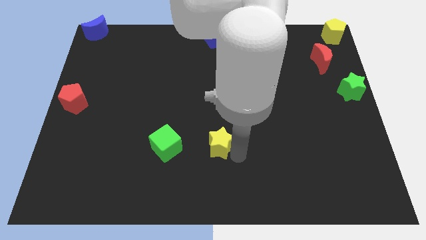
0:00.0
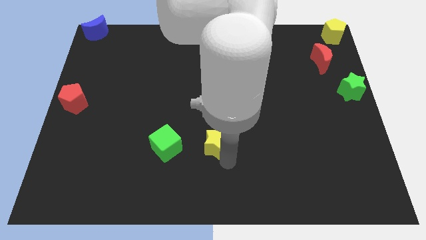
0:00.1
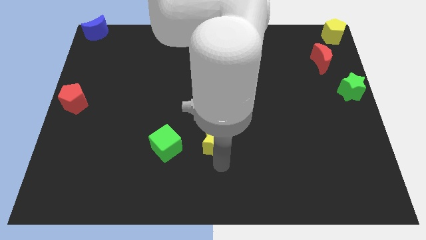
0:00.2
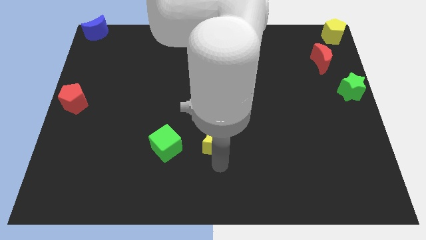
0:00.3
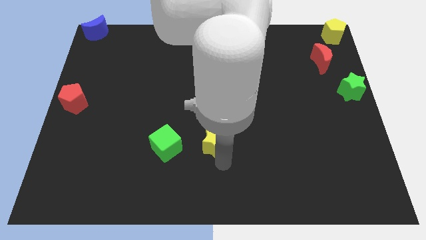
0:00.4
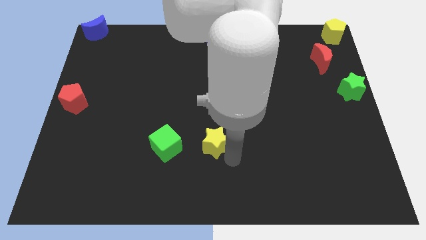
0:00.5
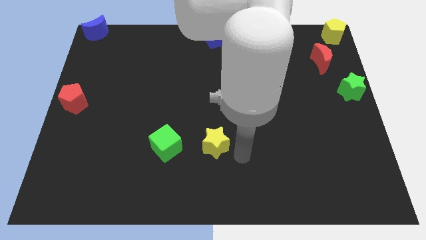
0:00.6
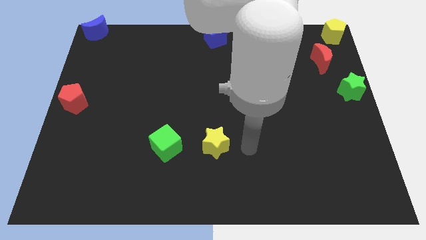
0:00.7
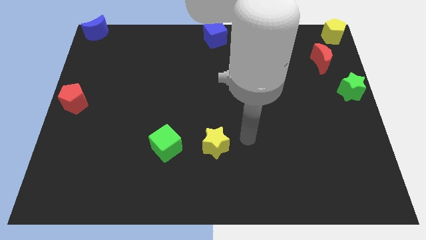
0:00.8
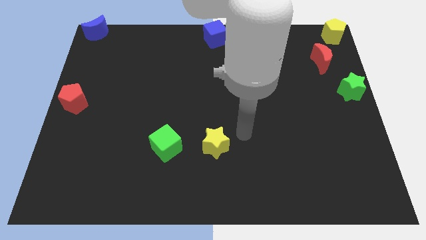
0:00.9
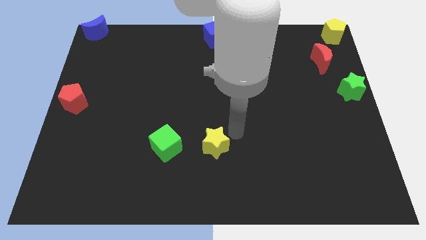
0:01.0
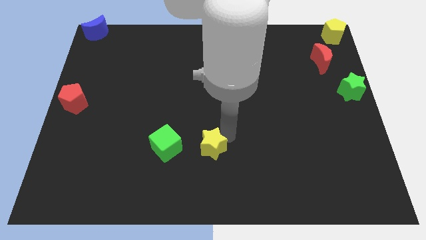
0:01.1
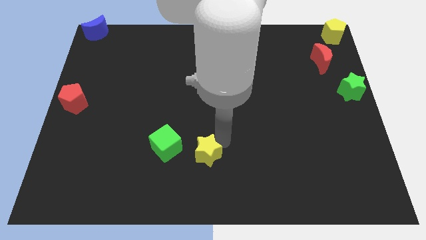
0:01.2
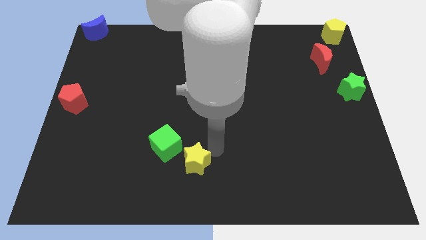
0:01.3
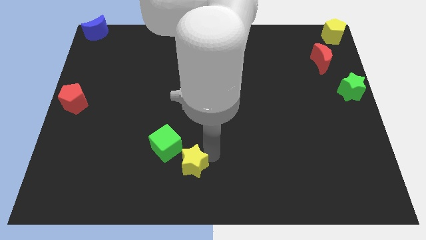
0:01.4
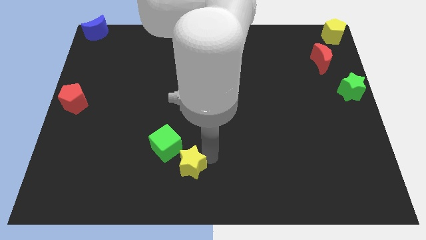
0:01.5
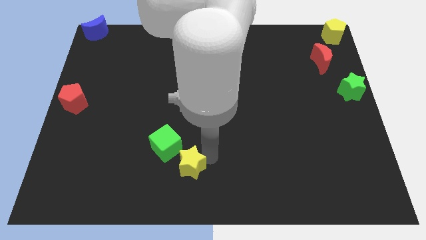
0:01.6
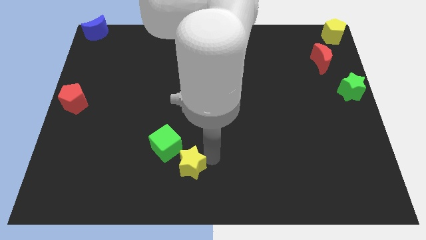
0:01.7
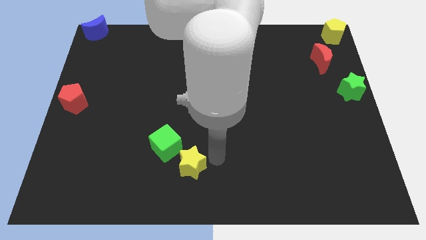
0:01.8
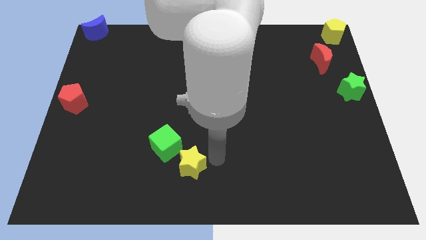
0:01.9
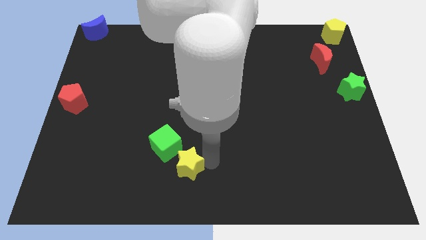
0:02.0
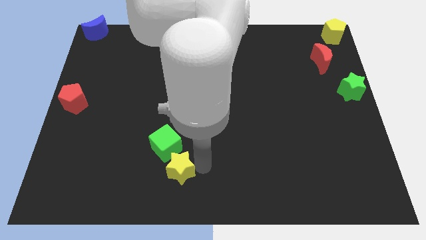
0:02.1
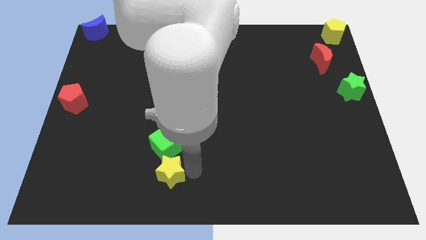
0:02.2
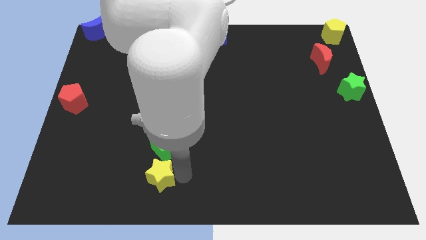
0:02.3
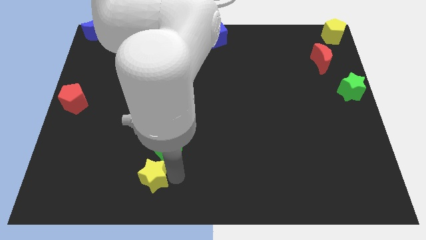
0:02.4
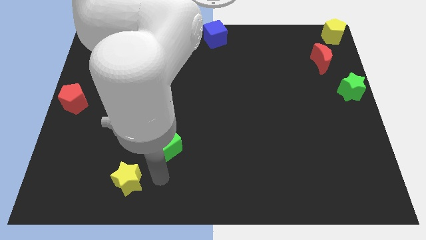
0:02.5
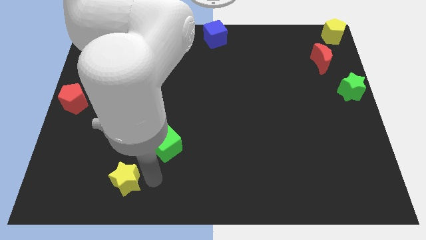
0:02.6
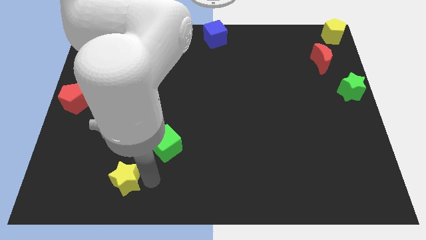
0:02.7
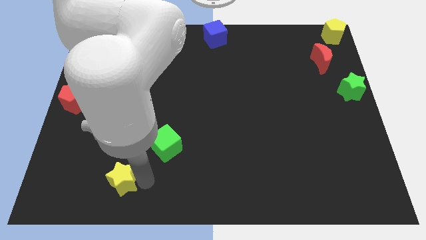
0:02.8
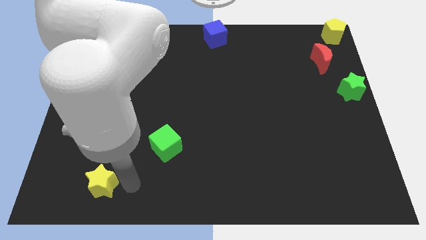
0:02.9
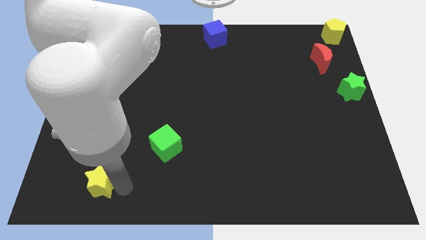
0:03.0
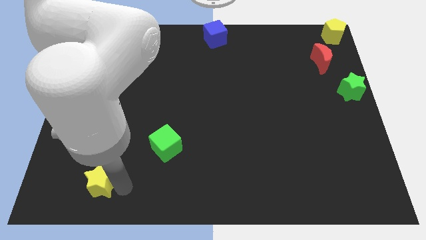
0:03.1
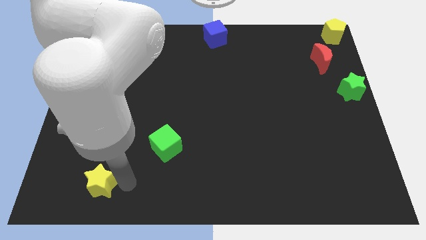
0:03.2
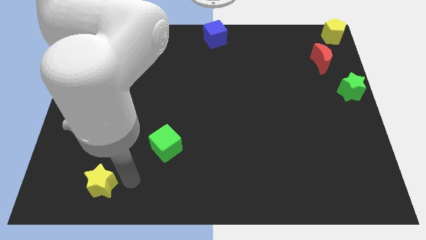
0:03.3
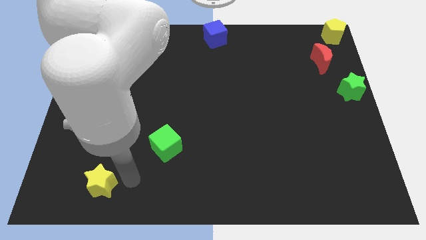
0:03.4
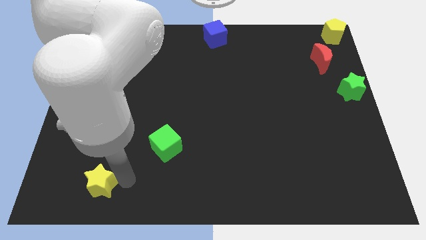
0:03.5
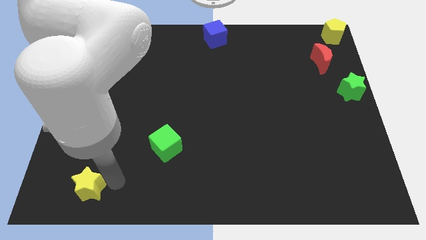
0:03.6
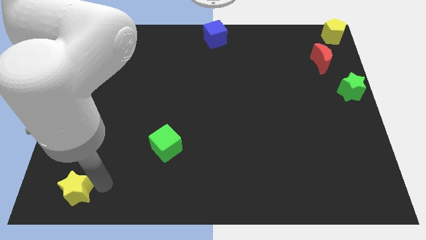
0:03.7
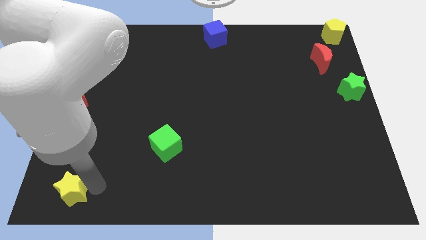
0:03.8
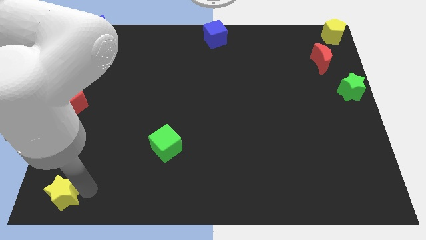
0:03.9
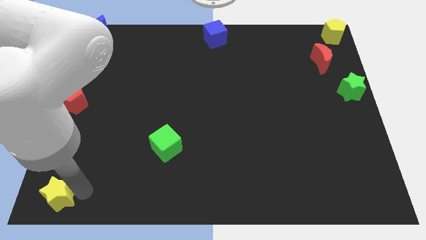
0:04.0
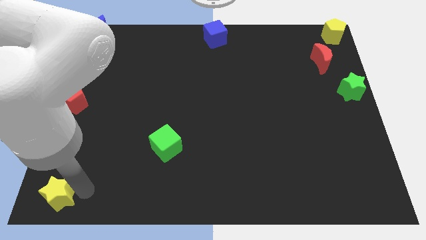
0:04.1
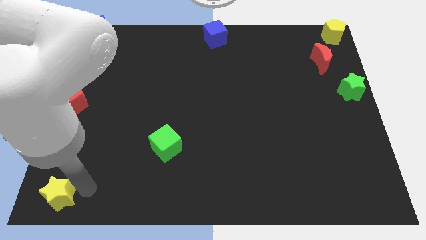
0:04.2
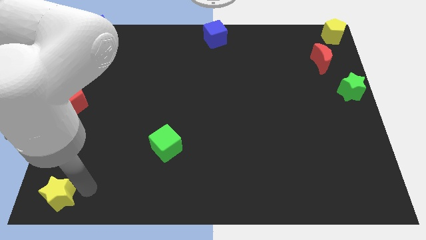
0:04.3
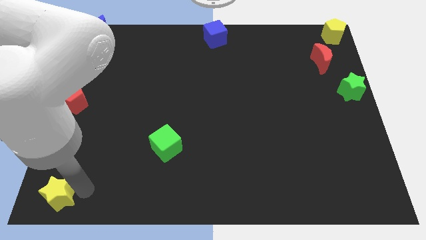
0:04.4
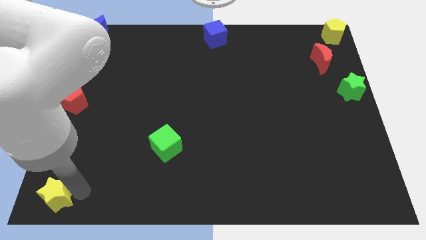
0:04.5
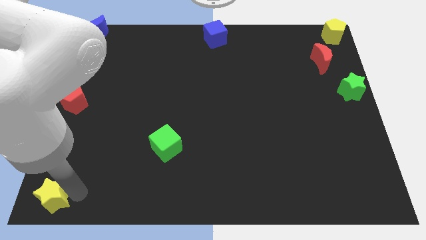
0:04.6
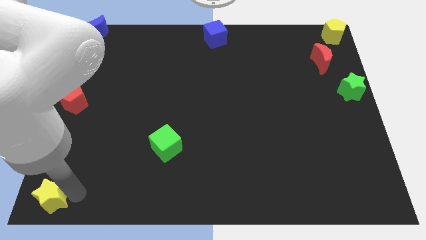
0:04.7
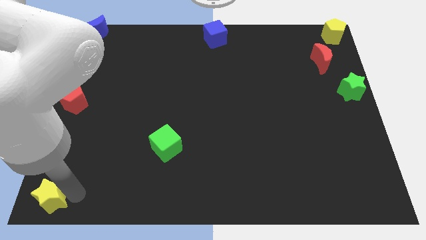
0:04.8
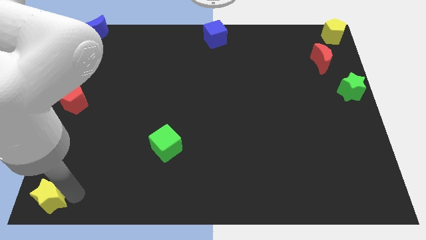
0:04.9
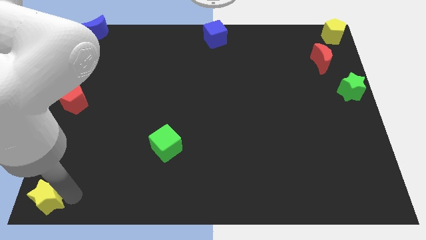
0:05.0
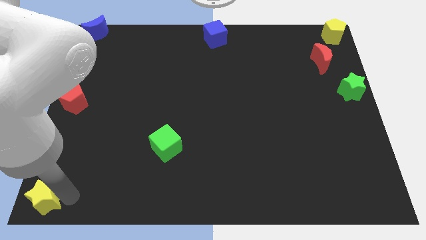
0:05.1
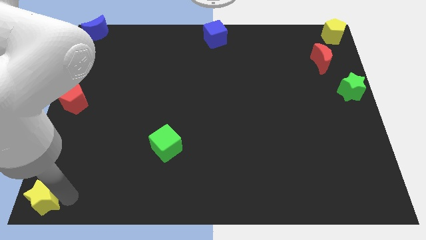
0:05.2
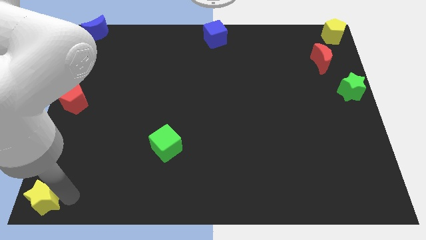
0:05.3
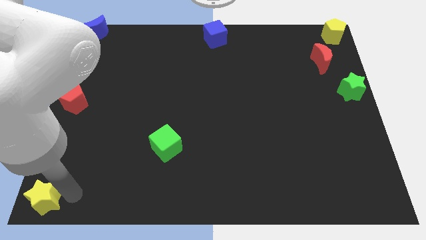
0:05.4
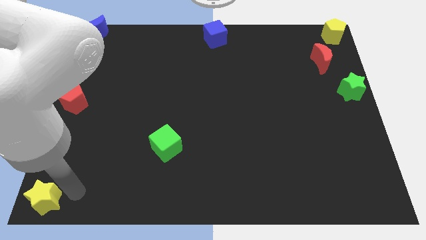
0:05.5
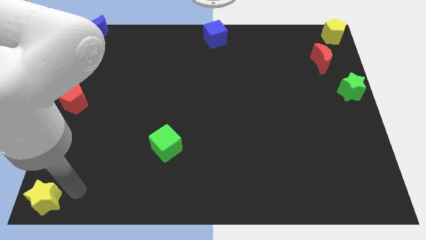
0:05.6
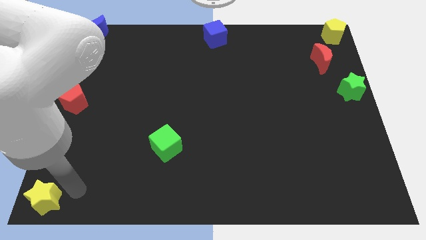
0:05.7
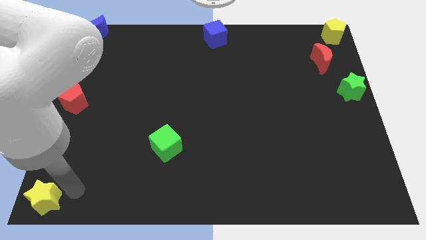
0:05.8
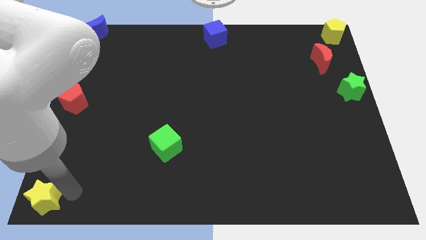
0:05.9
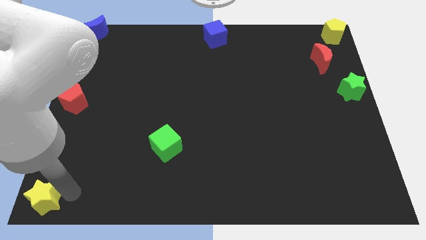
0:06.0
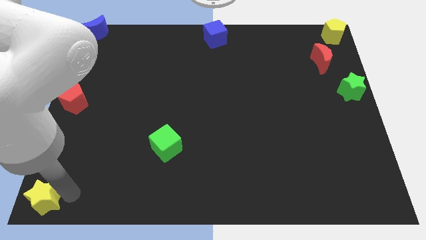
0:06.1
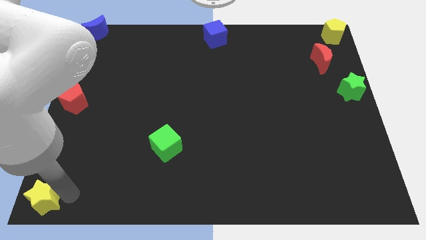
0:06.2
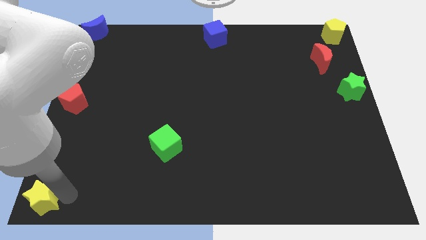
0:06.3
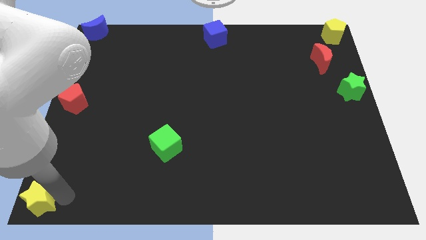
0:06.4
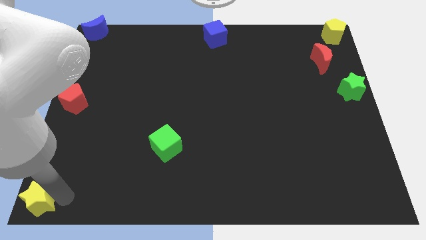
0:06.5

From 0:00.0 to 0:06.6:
push the yellow star towards the bottom left corner of the board

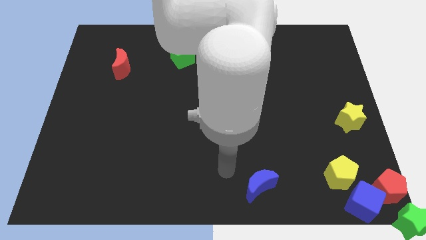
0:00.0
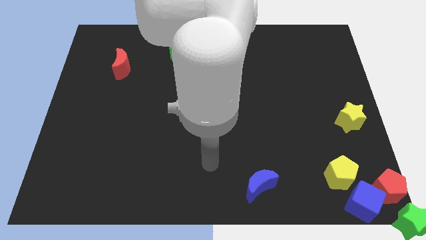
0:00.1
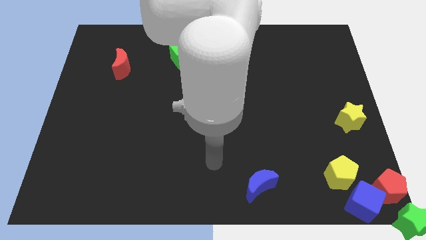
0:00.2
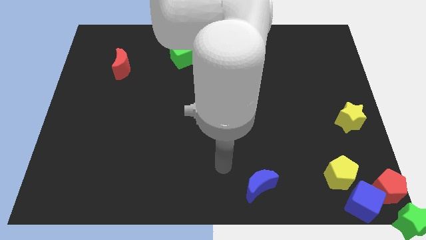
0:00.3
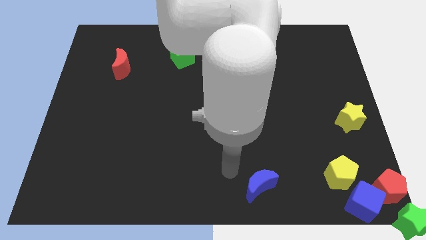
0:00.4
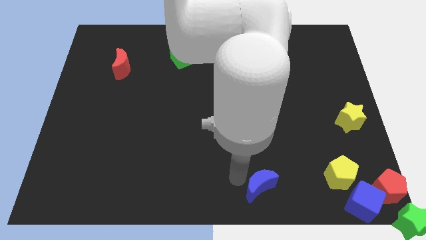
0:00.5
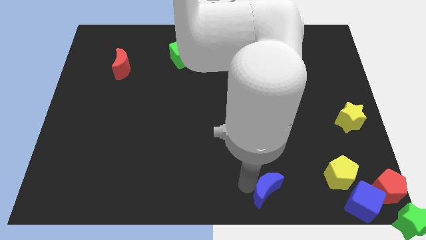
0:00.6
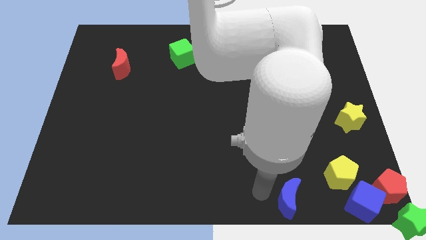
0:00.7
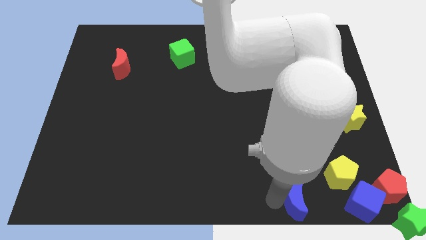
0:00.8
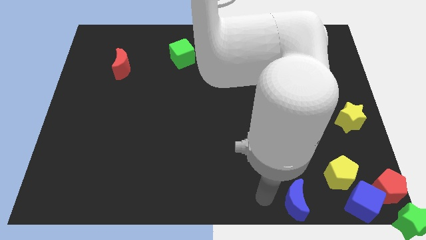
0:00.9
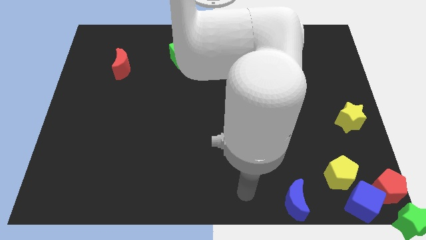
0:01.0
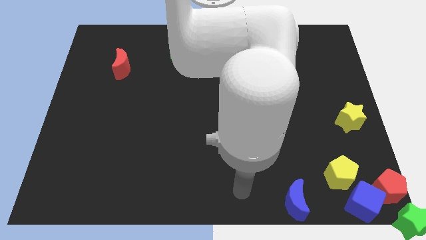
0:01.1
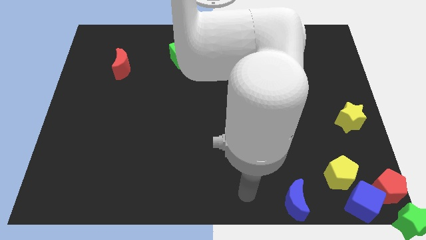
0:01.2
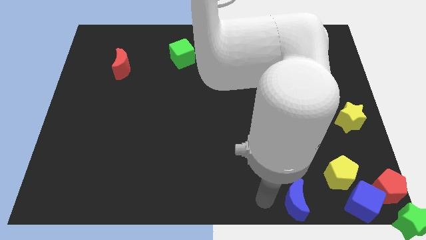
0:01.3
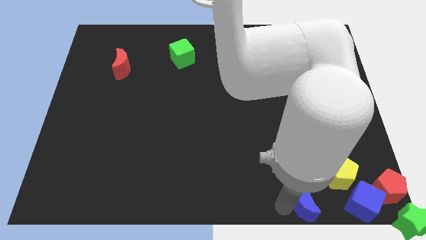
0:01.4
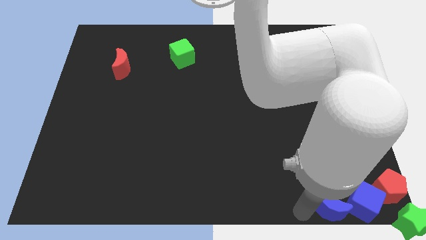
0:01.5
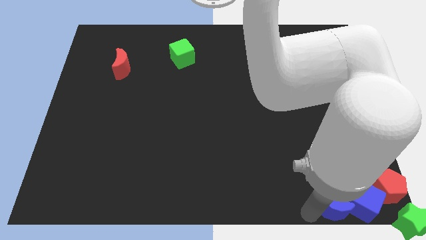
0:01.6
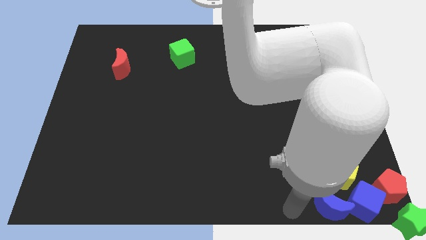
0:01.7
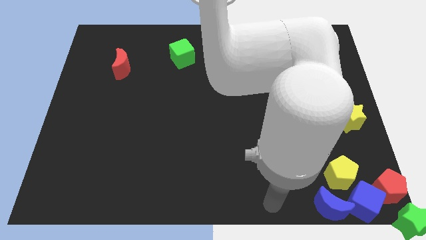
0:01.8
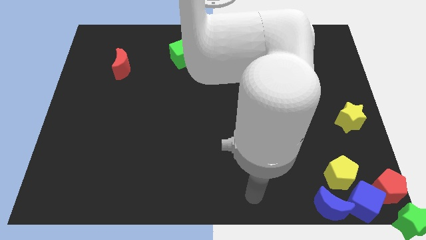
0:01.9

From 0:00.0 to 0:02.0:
place the blue crescent close to the blue cube

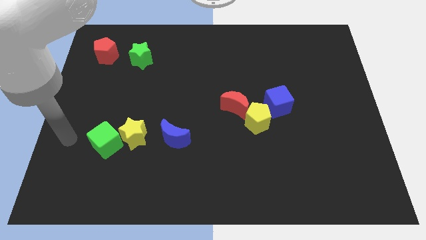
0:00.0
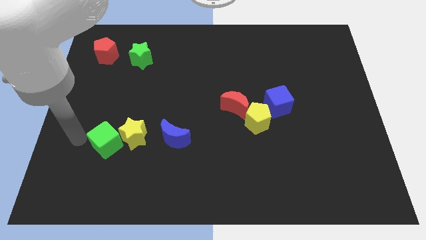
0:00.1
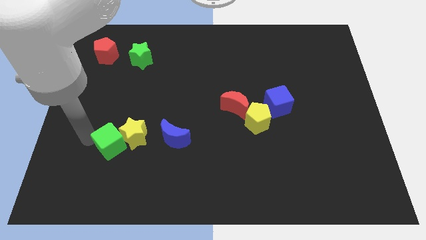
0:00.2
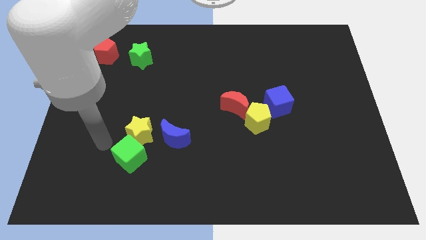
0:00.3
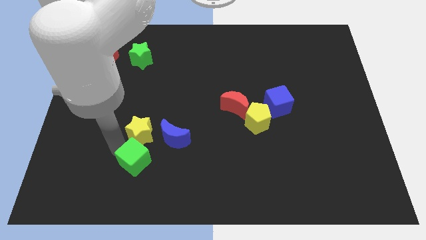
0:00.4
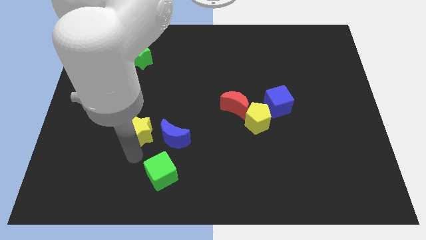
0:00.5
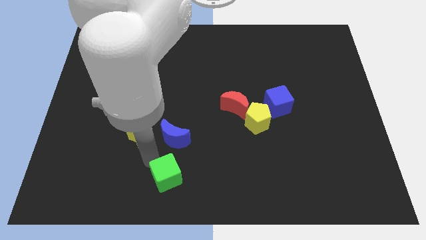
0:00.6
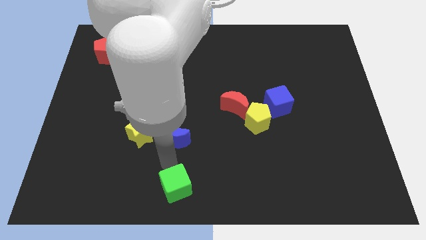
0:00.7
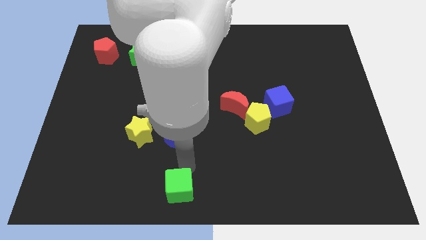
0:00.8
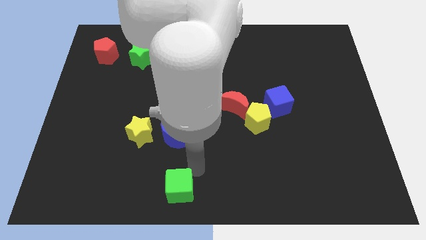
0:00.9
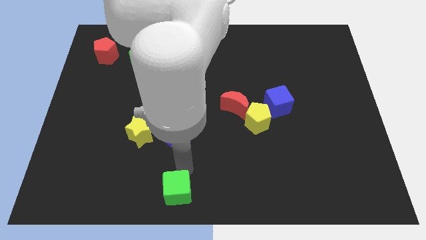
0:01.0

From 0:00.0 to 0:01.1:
move the green cube away from the yellow star
